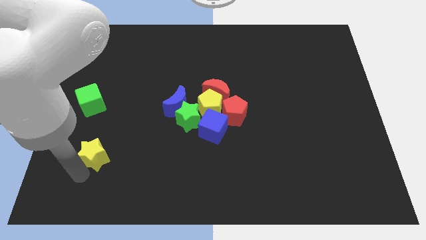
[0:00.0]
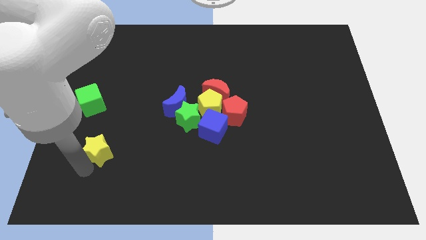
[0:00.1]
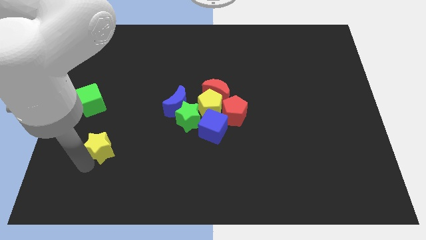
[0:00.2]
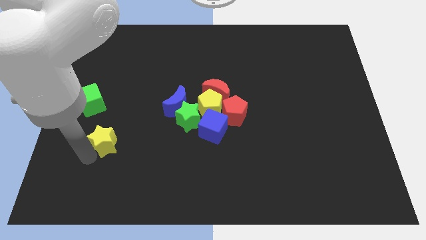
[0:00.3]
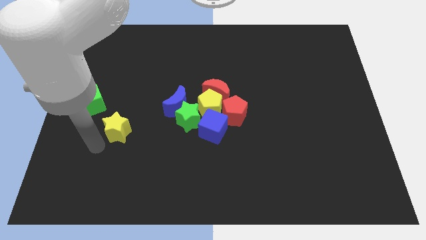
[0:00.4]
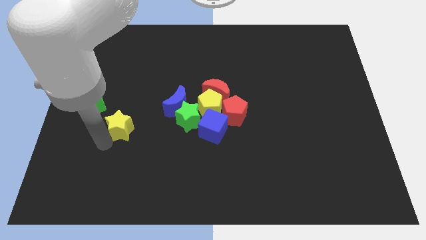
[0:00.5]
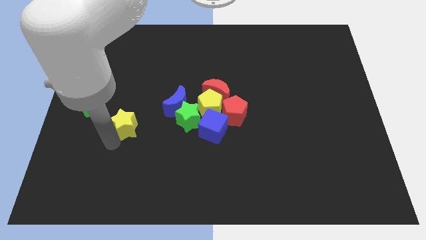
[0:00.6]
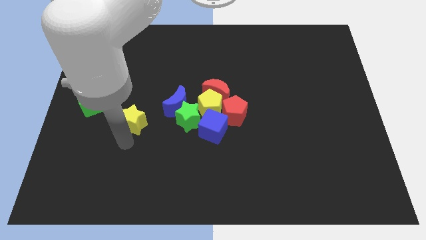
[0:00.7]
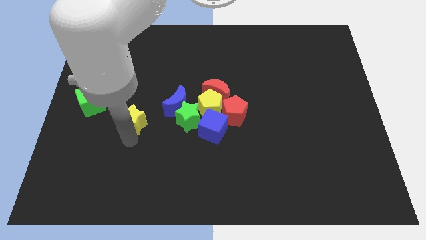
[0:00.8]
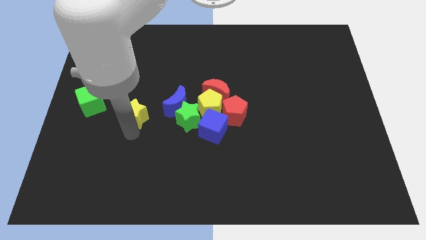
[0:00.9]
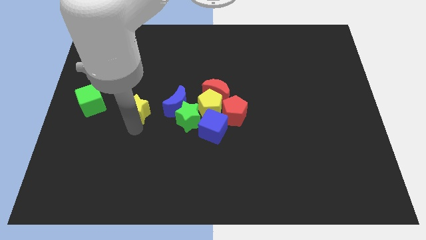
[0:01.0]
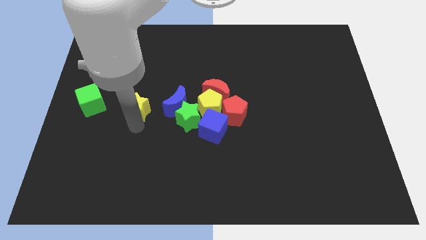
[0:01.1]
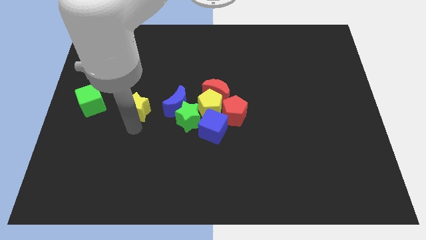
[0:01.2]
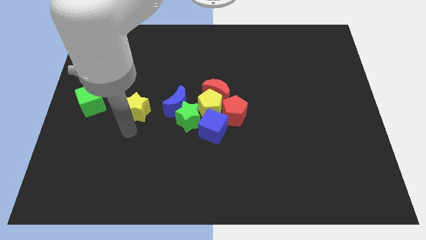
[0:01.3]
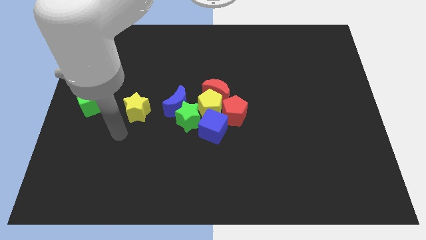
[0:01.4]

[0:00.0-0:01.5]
move the yellow star to the left of the blue crescent

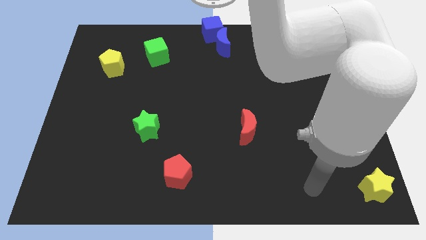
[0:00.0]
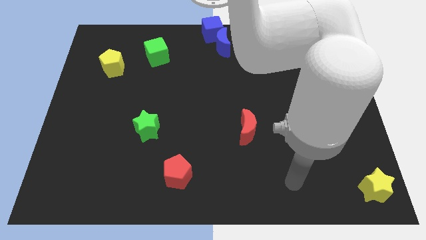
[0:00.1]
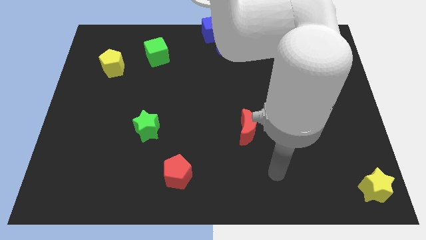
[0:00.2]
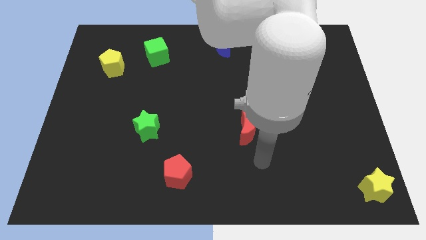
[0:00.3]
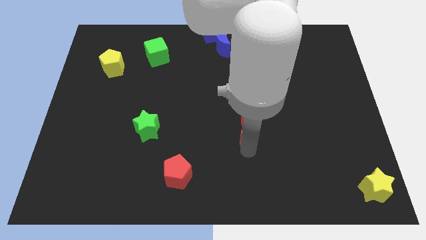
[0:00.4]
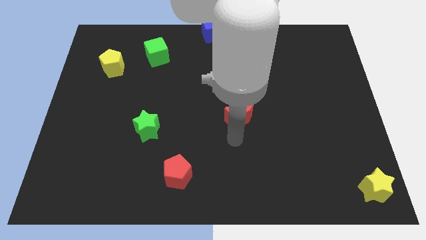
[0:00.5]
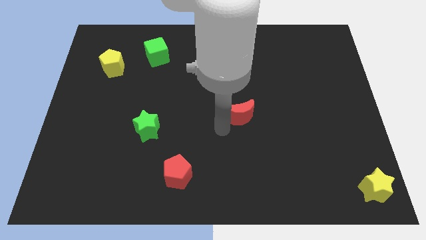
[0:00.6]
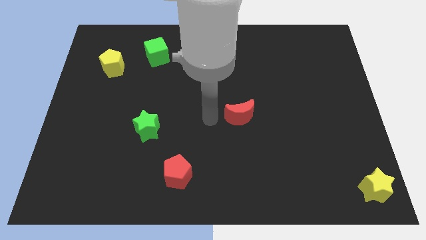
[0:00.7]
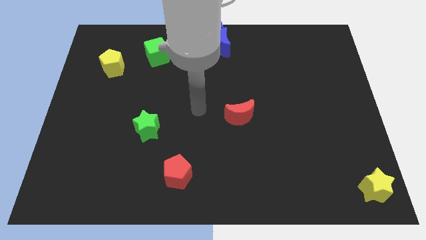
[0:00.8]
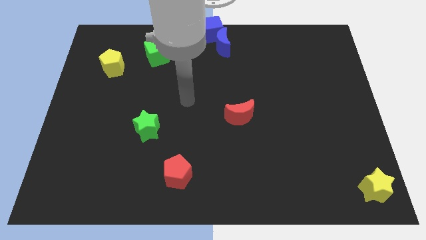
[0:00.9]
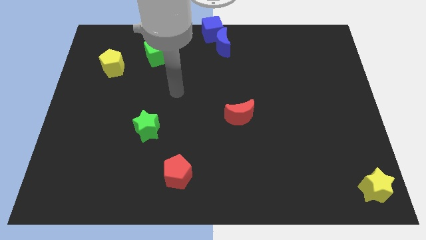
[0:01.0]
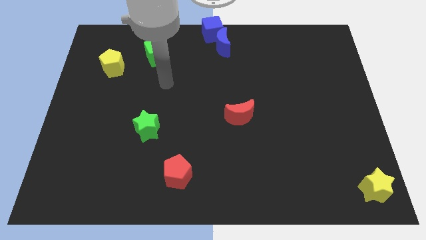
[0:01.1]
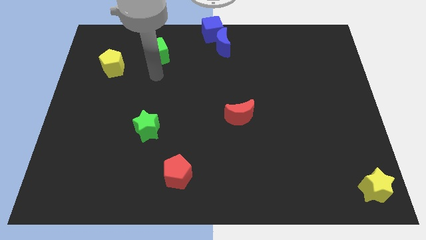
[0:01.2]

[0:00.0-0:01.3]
push the red moon upward

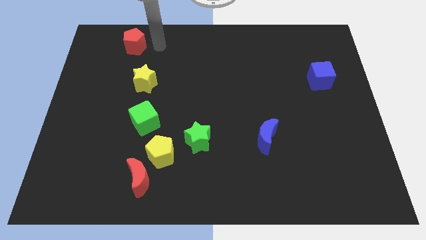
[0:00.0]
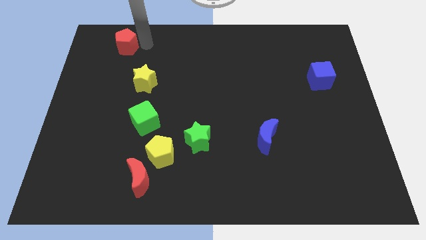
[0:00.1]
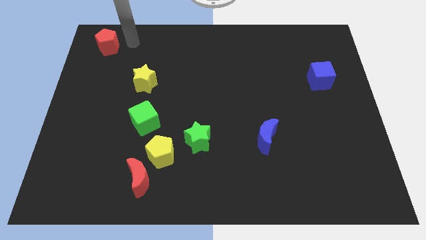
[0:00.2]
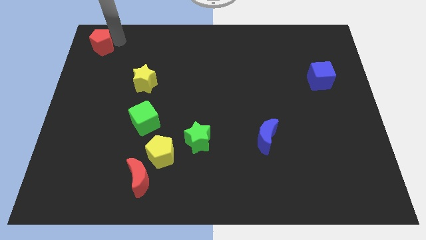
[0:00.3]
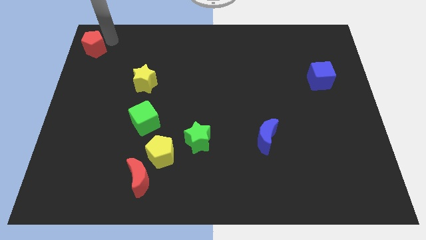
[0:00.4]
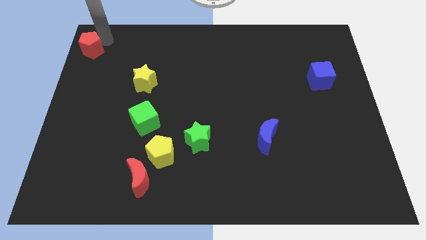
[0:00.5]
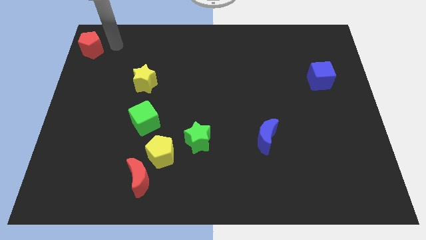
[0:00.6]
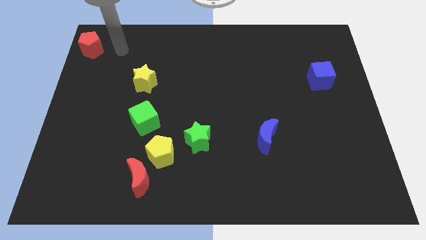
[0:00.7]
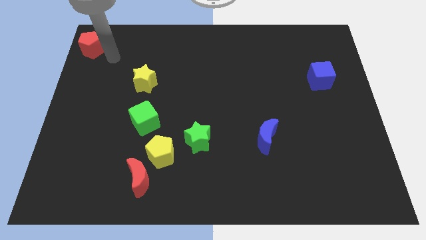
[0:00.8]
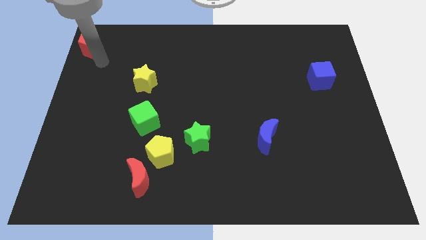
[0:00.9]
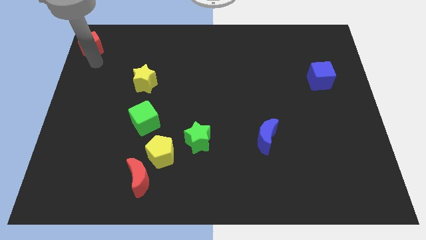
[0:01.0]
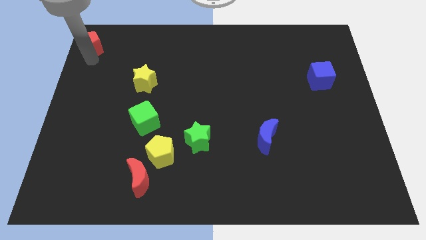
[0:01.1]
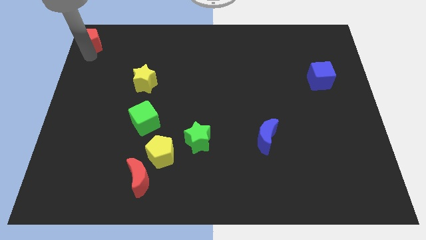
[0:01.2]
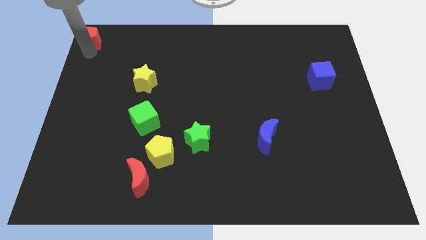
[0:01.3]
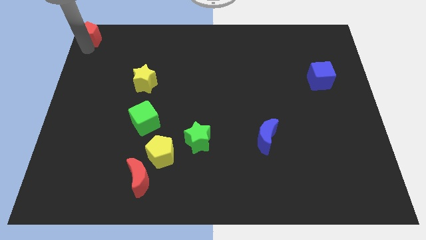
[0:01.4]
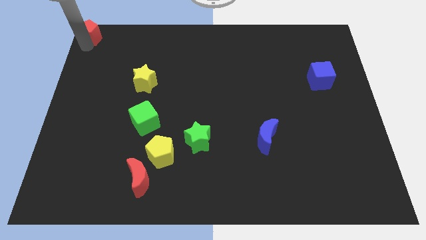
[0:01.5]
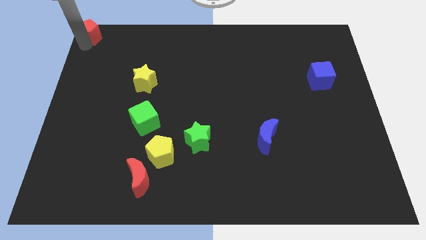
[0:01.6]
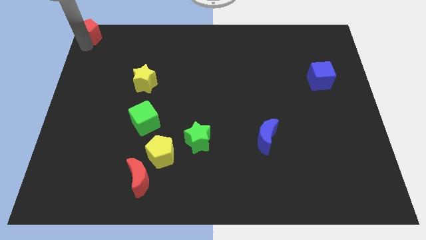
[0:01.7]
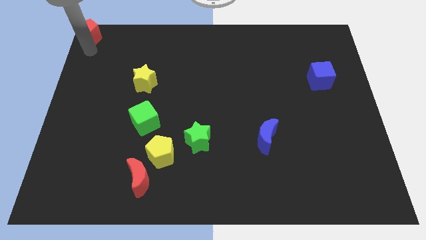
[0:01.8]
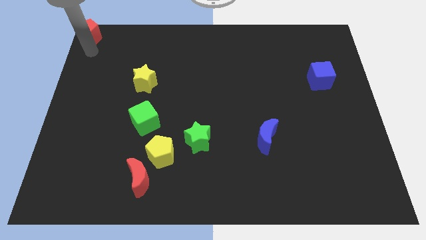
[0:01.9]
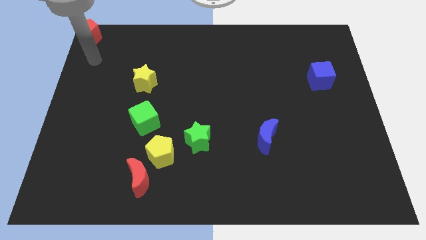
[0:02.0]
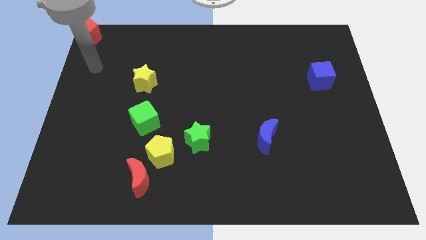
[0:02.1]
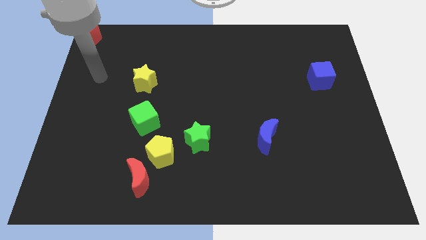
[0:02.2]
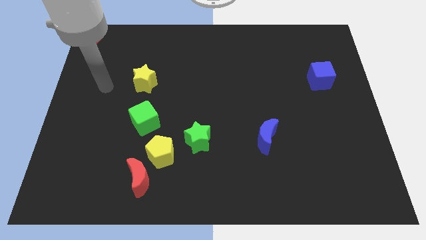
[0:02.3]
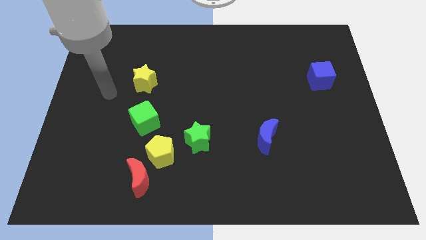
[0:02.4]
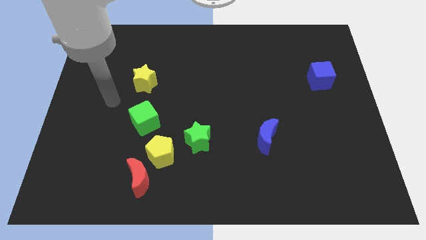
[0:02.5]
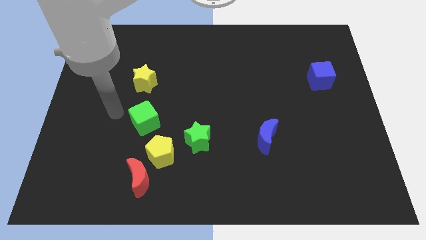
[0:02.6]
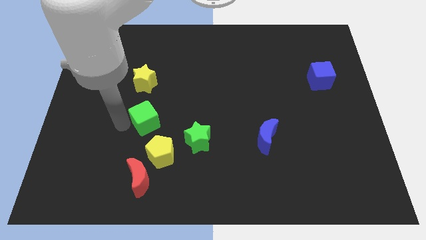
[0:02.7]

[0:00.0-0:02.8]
place the red pentagon towards the top left corner of the board

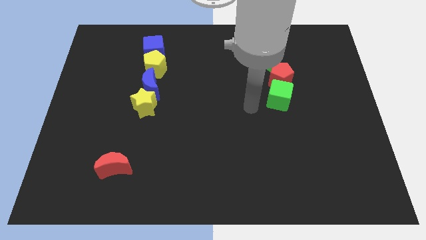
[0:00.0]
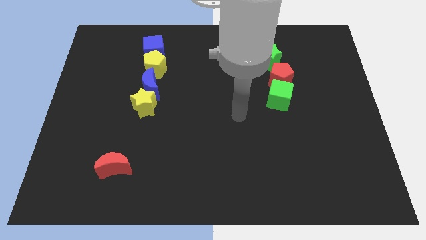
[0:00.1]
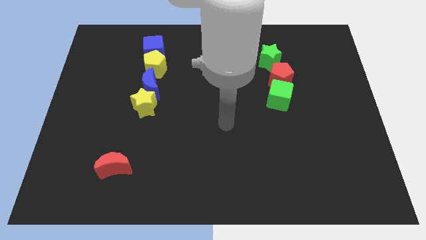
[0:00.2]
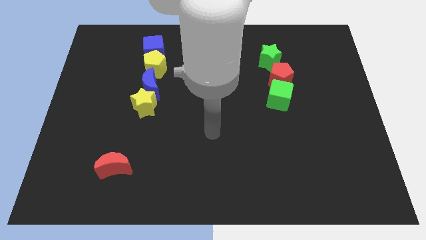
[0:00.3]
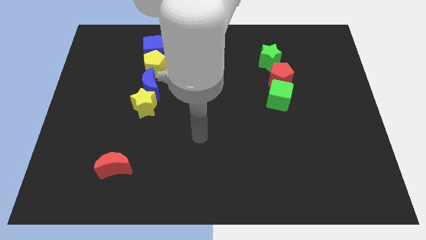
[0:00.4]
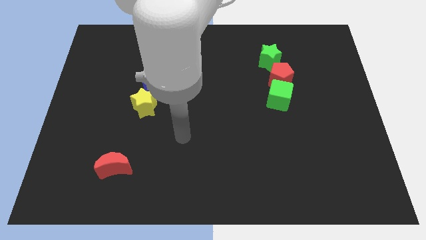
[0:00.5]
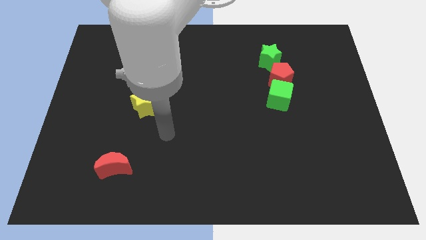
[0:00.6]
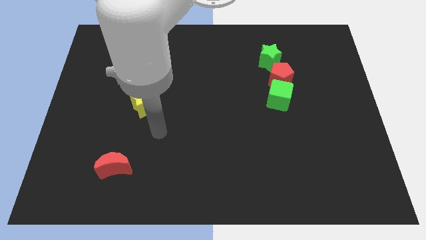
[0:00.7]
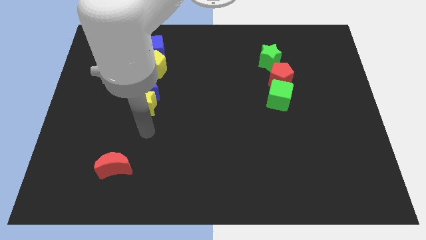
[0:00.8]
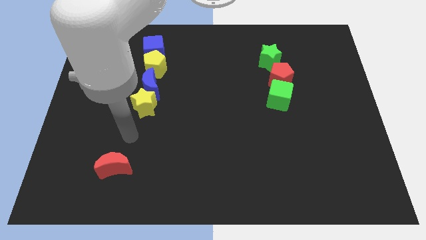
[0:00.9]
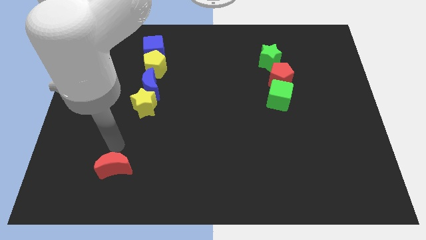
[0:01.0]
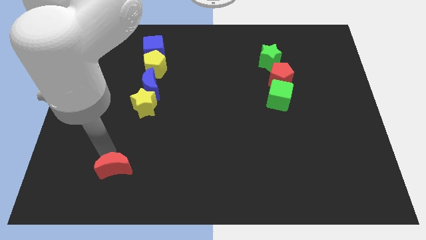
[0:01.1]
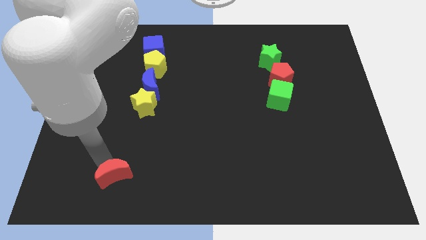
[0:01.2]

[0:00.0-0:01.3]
touch the top side of the red crescent

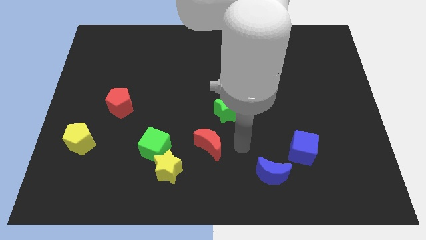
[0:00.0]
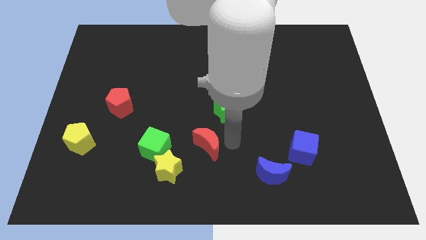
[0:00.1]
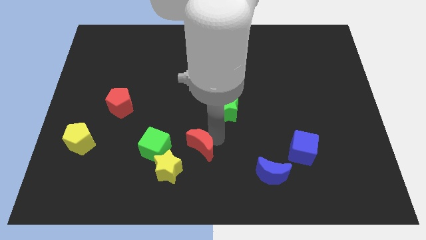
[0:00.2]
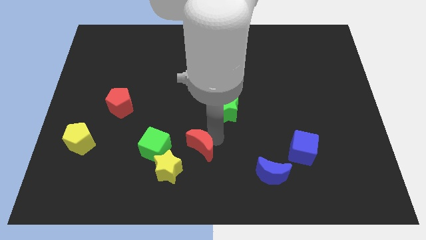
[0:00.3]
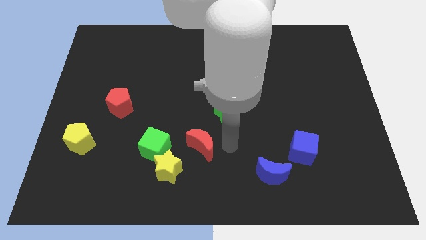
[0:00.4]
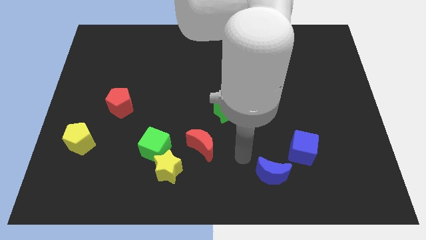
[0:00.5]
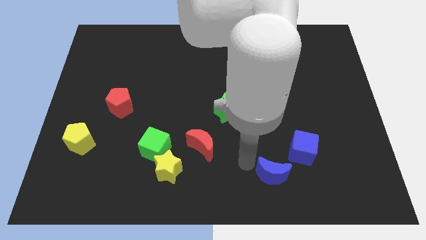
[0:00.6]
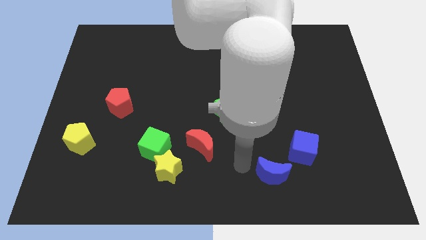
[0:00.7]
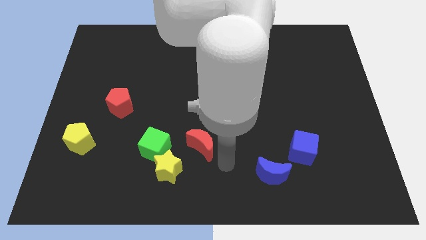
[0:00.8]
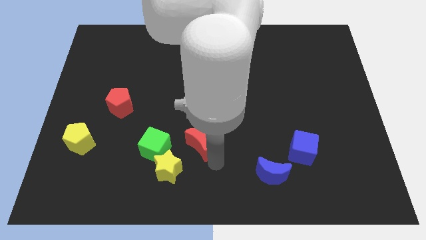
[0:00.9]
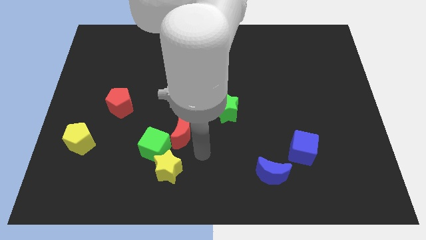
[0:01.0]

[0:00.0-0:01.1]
push the red crescent on the top right side of the green cube

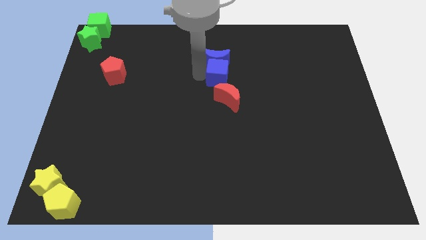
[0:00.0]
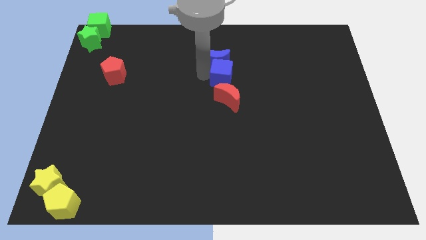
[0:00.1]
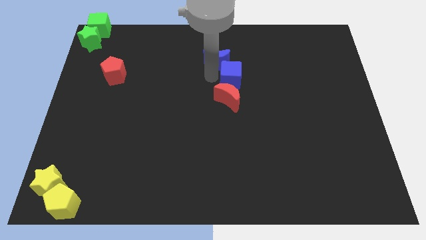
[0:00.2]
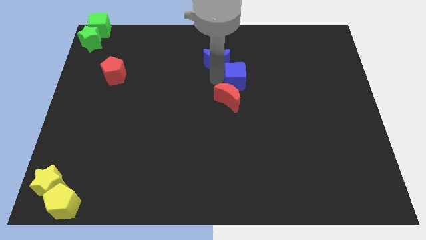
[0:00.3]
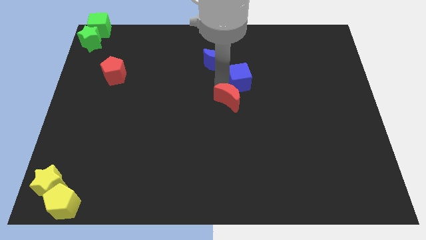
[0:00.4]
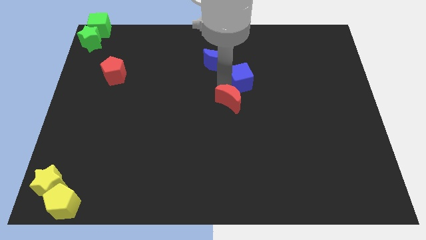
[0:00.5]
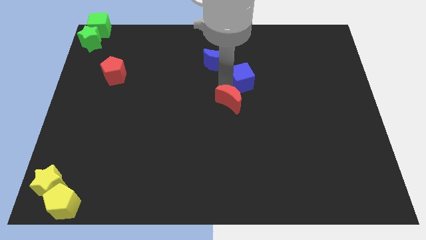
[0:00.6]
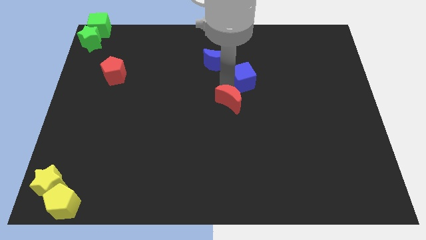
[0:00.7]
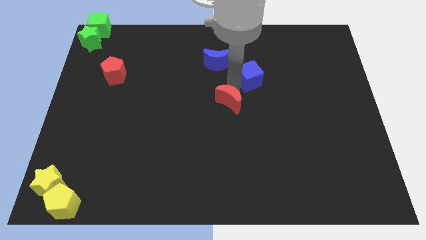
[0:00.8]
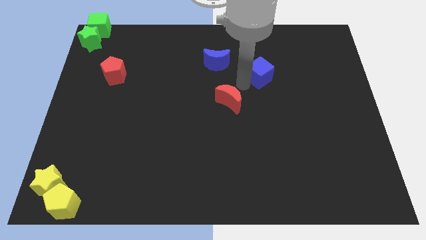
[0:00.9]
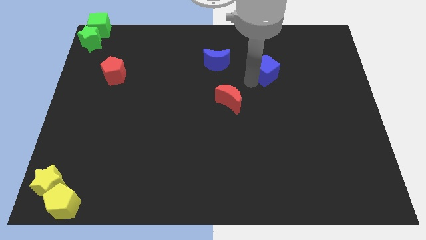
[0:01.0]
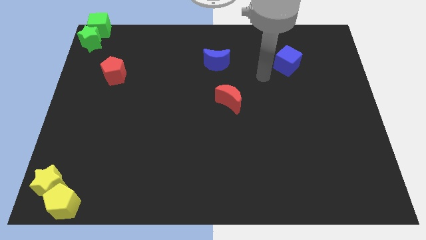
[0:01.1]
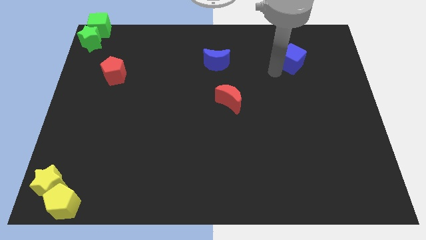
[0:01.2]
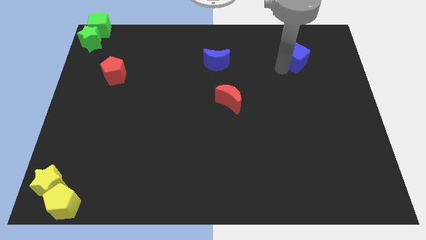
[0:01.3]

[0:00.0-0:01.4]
move the blue cube away from the blue moon
